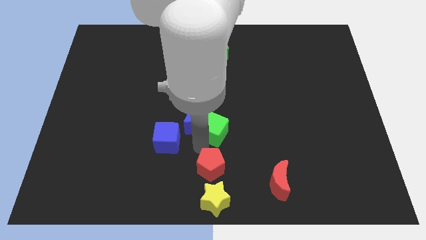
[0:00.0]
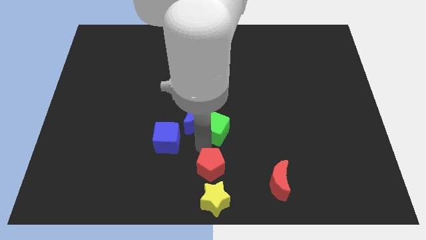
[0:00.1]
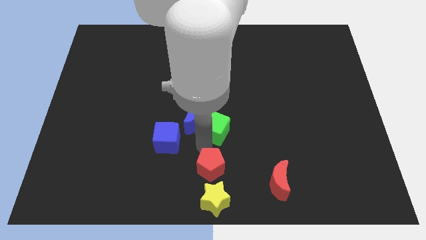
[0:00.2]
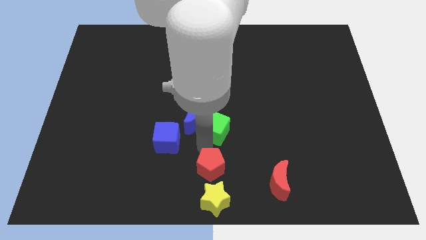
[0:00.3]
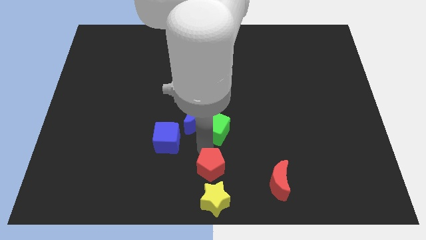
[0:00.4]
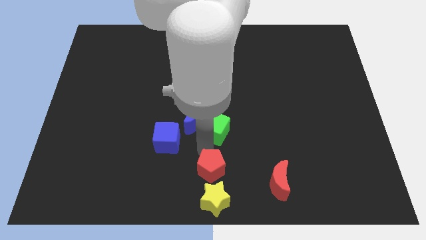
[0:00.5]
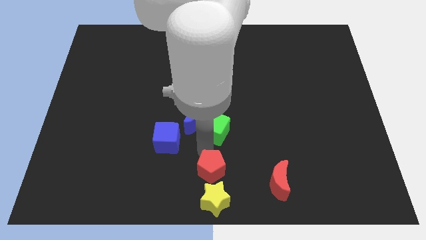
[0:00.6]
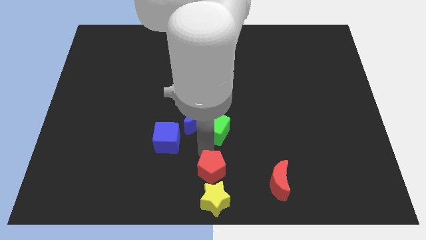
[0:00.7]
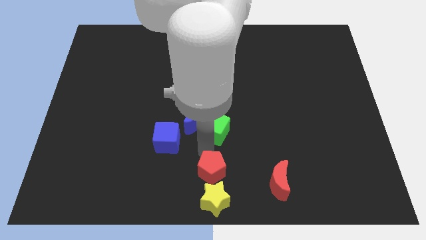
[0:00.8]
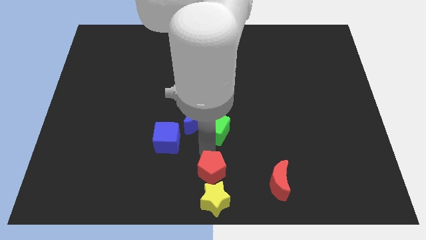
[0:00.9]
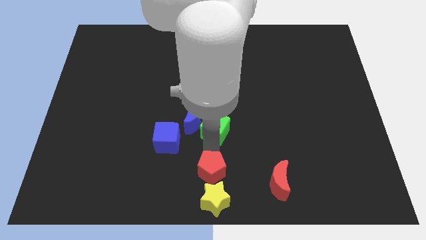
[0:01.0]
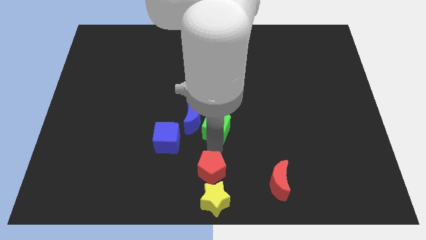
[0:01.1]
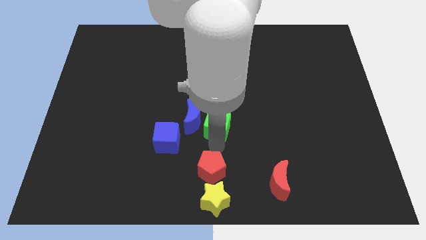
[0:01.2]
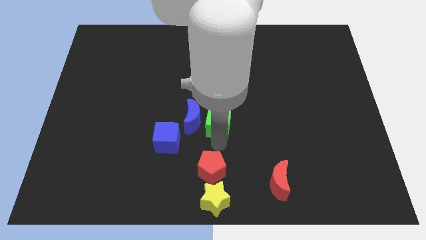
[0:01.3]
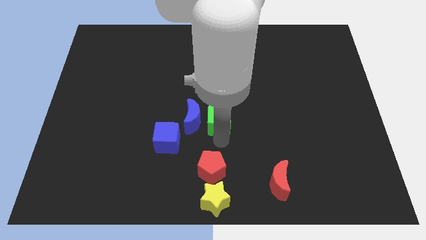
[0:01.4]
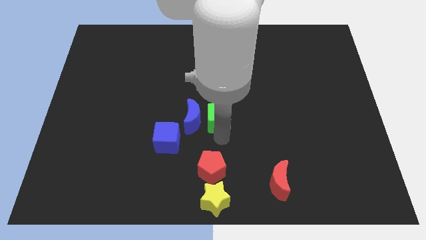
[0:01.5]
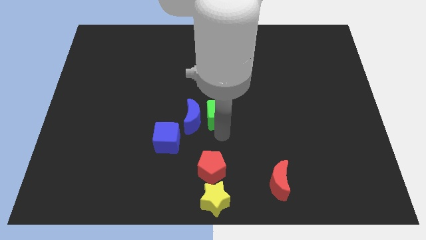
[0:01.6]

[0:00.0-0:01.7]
place the green cube right to the blue moon

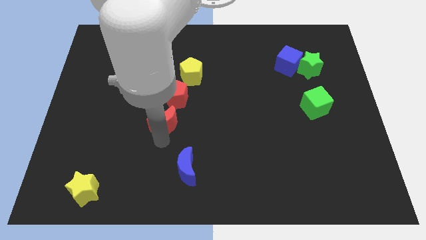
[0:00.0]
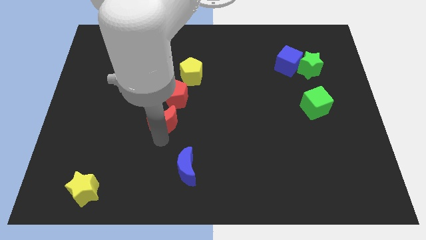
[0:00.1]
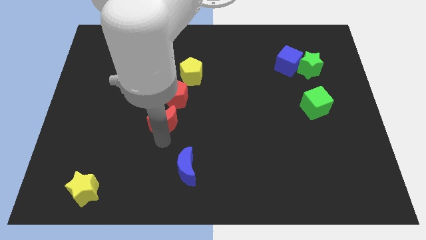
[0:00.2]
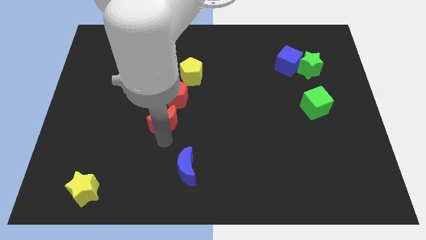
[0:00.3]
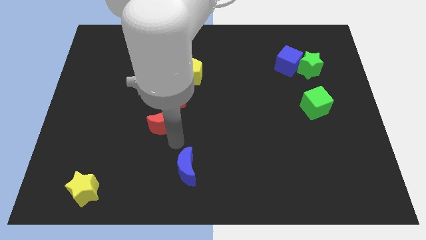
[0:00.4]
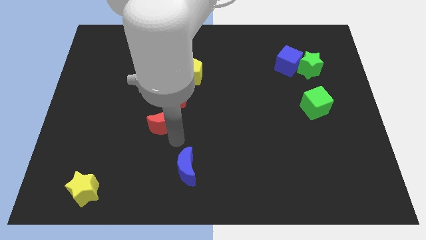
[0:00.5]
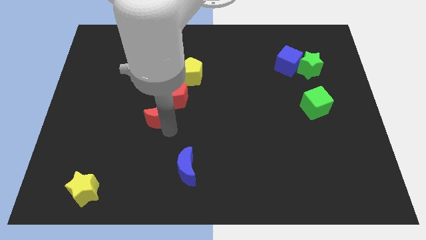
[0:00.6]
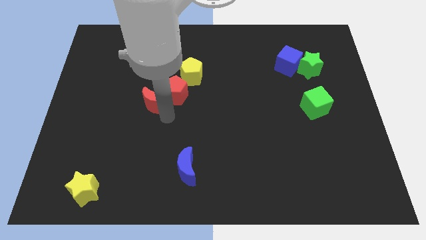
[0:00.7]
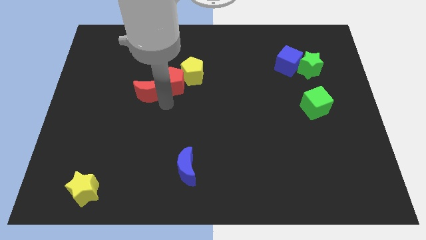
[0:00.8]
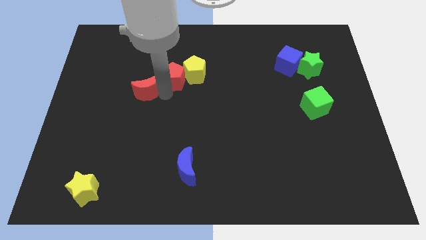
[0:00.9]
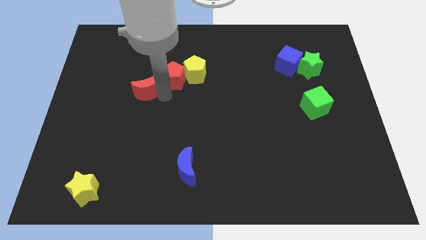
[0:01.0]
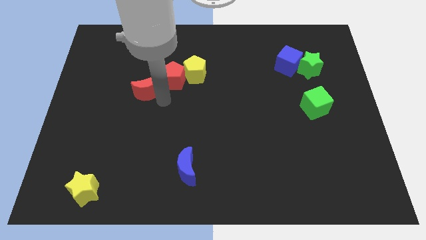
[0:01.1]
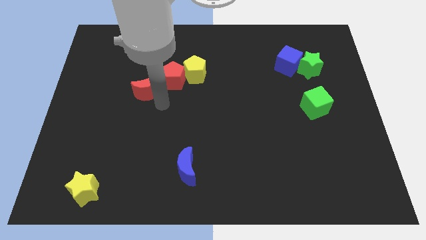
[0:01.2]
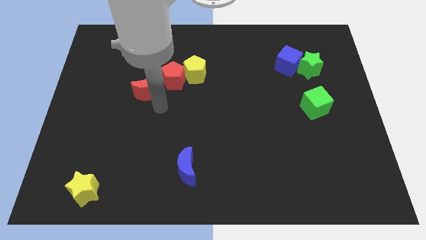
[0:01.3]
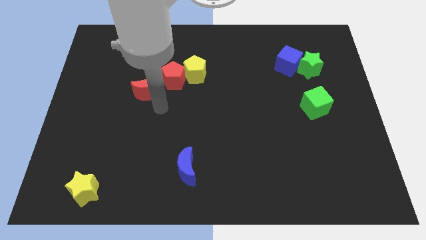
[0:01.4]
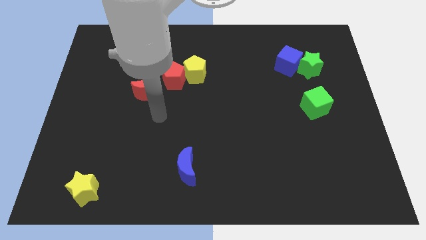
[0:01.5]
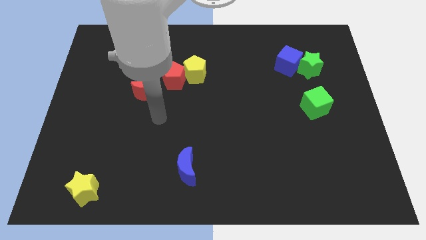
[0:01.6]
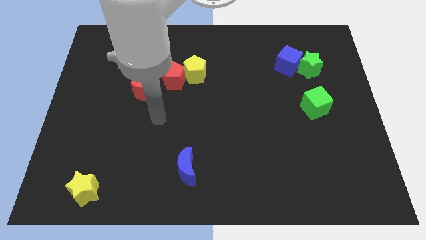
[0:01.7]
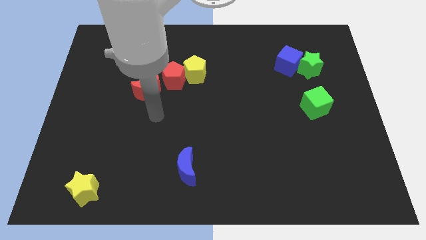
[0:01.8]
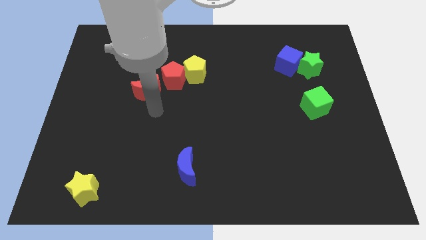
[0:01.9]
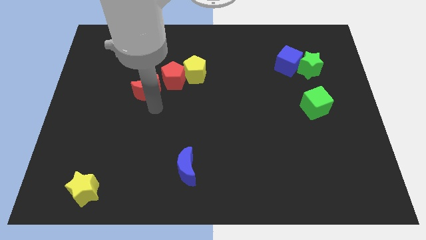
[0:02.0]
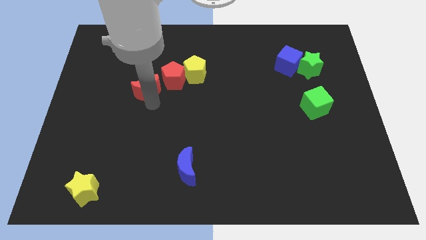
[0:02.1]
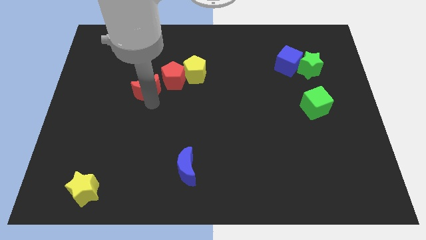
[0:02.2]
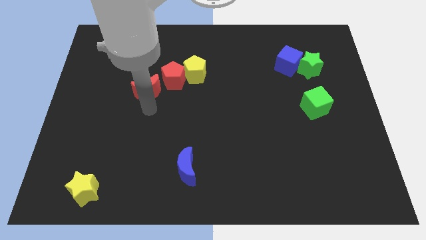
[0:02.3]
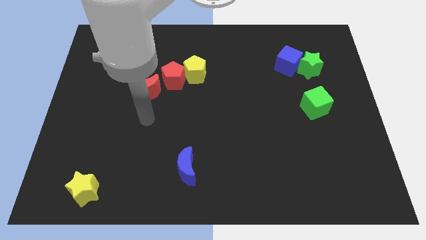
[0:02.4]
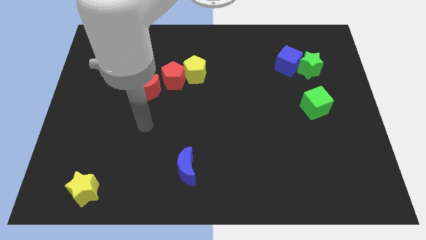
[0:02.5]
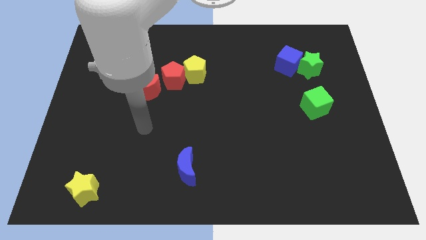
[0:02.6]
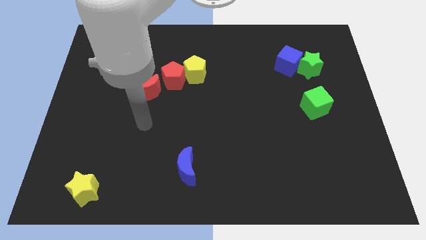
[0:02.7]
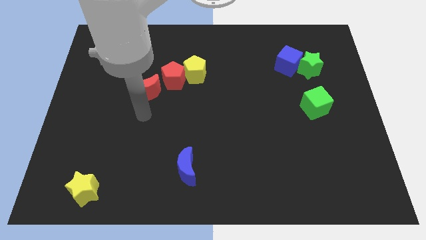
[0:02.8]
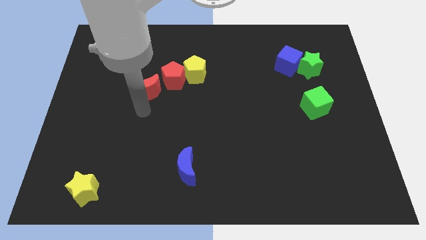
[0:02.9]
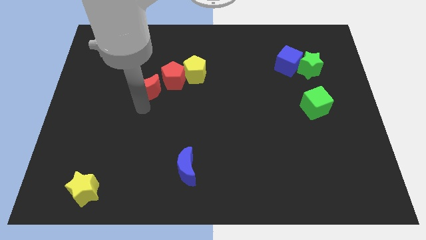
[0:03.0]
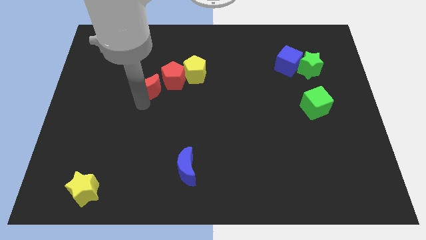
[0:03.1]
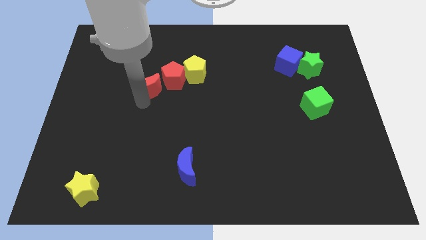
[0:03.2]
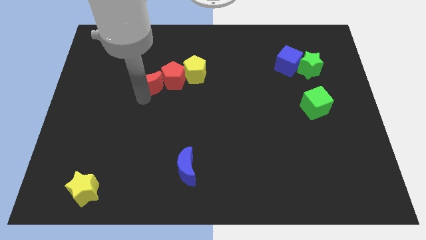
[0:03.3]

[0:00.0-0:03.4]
make a diagonal line out of red blocks and the yellow pentagon

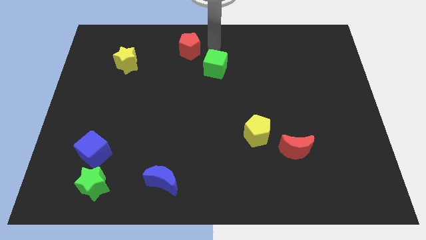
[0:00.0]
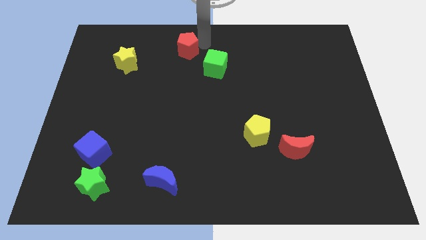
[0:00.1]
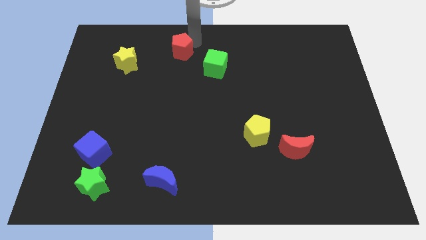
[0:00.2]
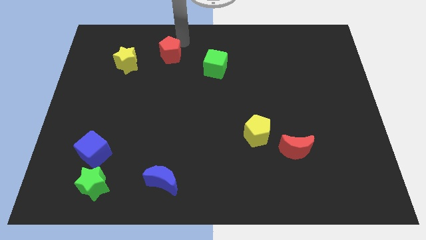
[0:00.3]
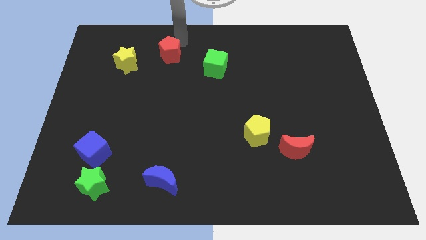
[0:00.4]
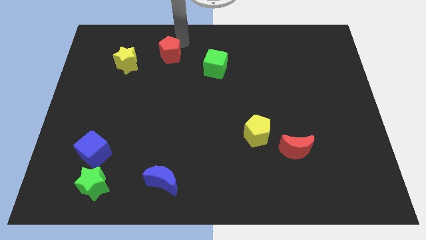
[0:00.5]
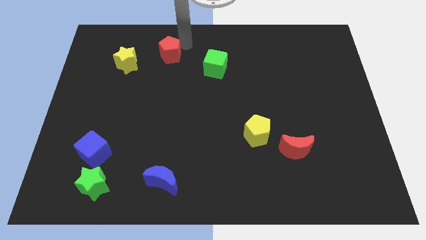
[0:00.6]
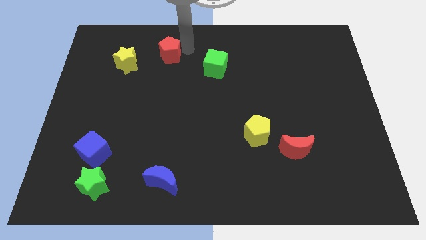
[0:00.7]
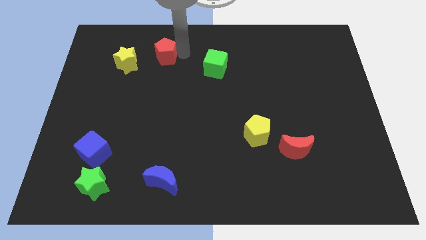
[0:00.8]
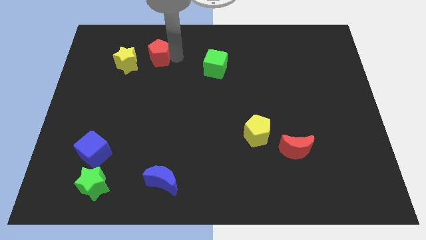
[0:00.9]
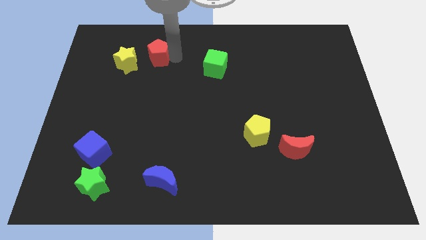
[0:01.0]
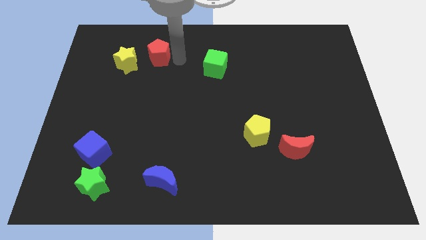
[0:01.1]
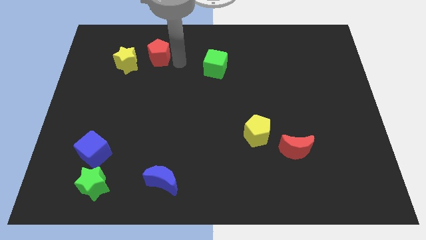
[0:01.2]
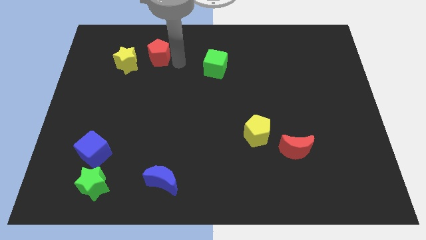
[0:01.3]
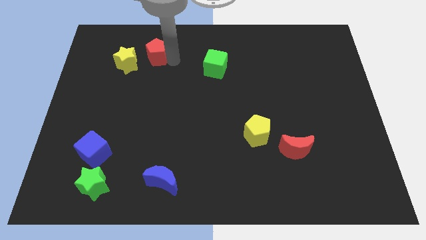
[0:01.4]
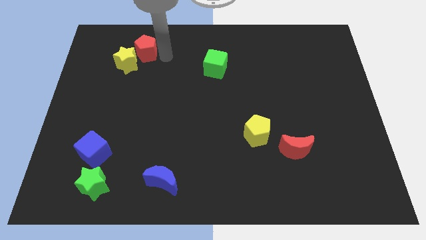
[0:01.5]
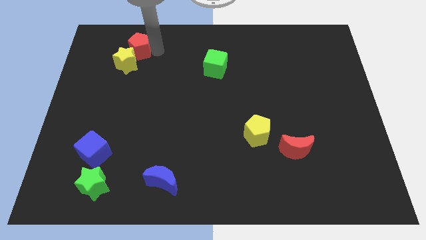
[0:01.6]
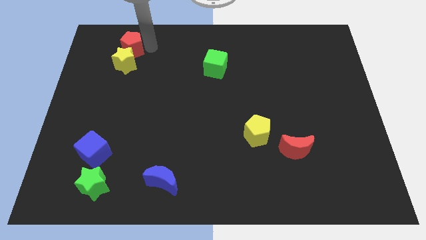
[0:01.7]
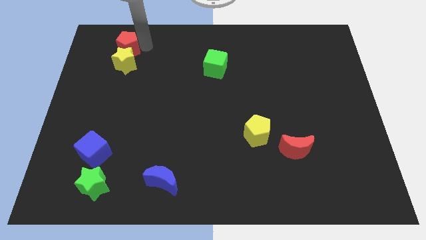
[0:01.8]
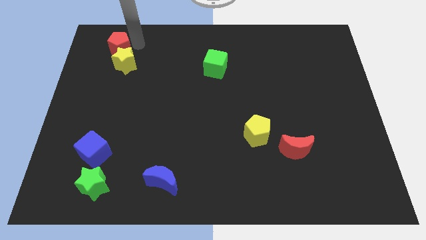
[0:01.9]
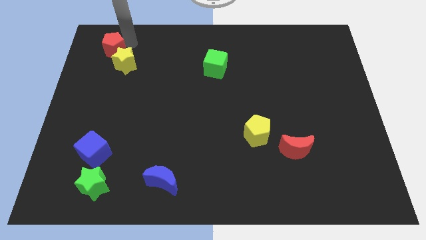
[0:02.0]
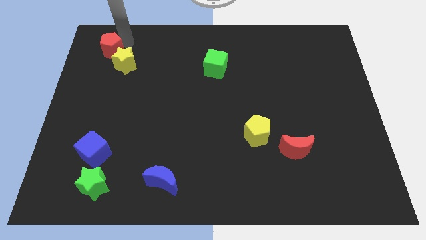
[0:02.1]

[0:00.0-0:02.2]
push the red pentagon into the yellow star

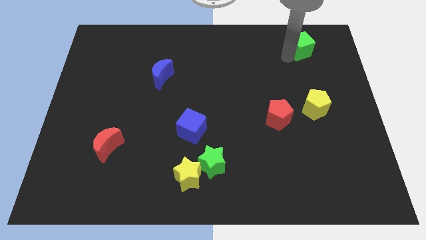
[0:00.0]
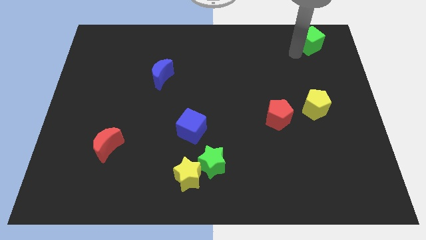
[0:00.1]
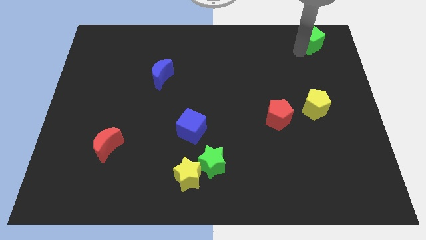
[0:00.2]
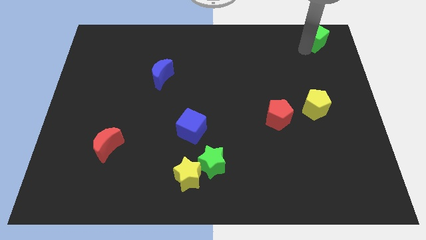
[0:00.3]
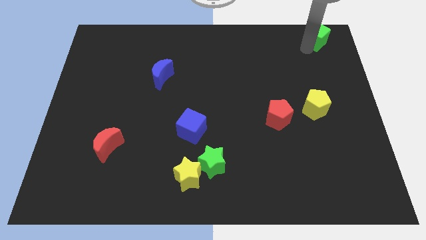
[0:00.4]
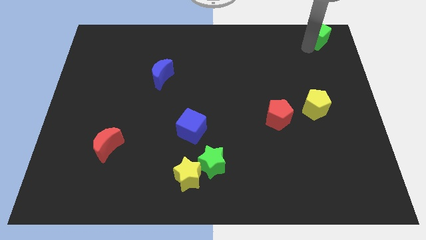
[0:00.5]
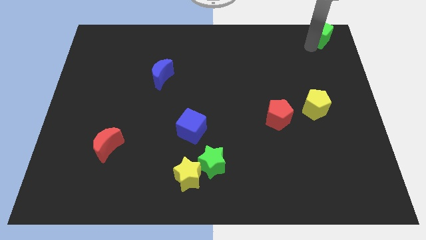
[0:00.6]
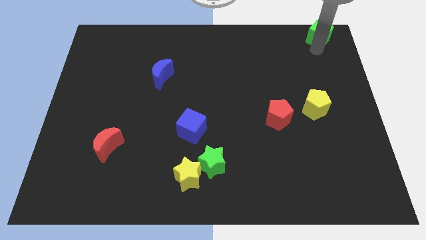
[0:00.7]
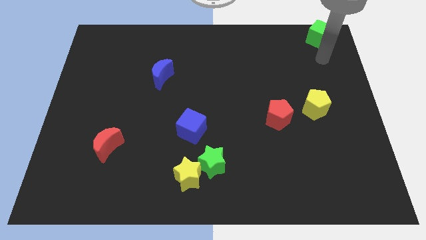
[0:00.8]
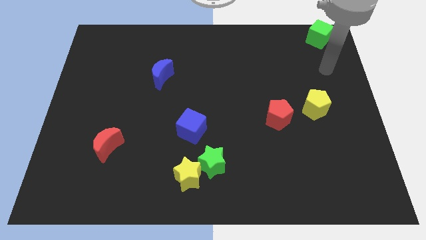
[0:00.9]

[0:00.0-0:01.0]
move the green cube towards the top right corner of the board

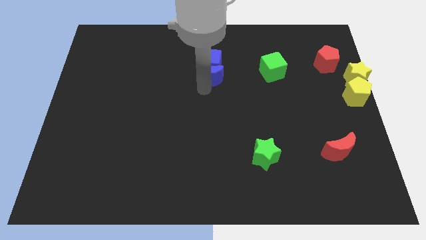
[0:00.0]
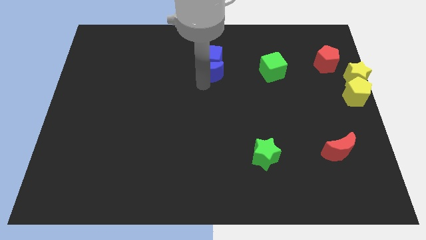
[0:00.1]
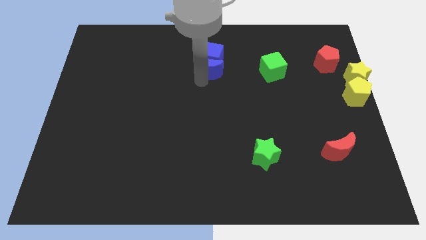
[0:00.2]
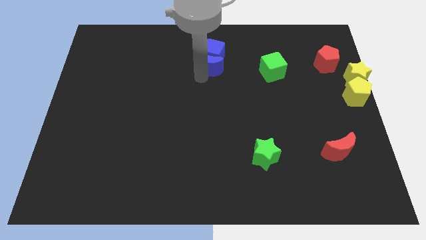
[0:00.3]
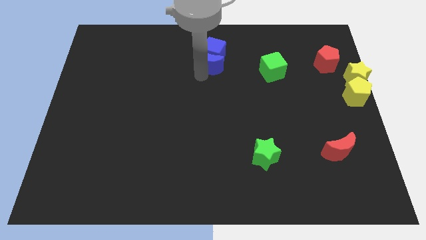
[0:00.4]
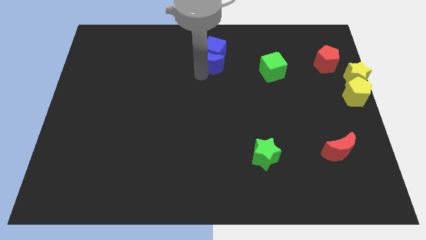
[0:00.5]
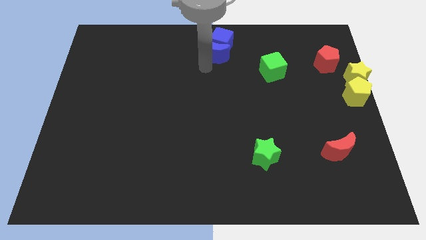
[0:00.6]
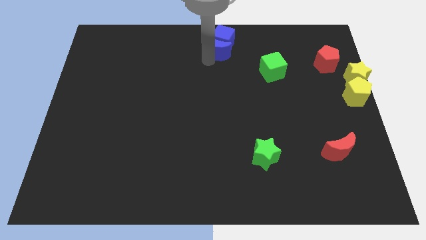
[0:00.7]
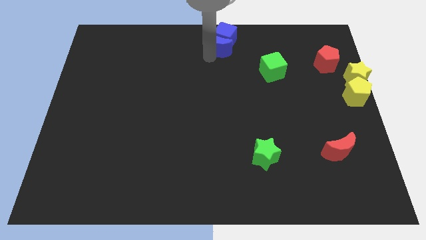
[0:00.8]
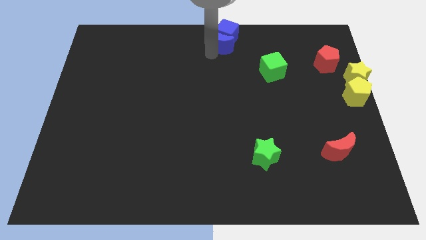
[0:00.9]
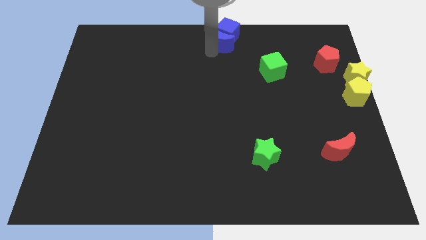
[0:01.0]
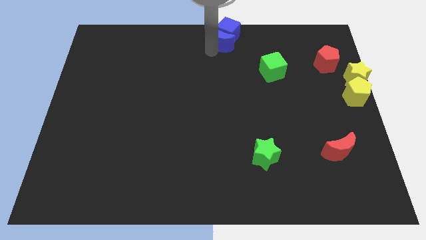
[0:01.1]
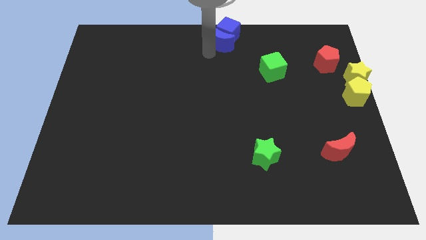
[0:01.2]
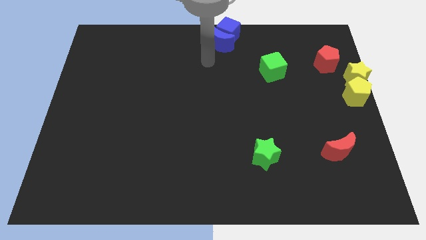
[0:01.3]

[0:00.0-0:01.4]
move the blue blocks to the top middle of the board
